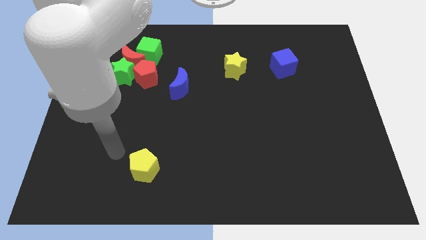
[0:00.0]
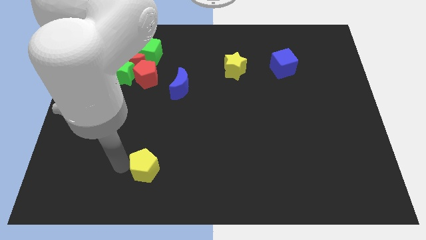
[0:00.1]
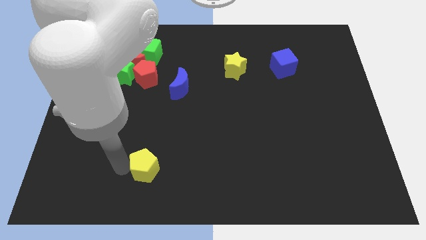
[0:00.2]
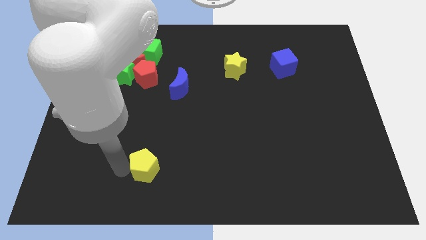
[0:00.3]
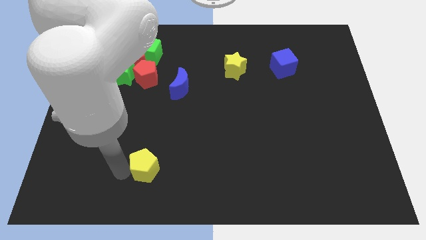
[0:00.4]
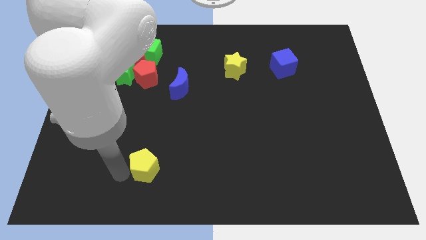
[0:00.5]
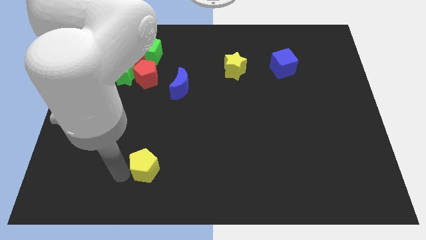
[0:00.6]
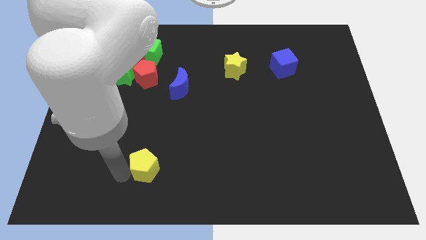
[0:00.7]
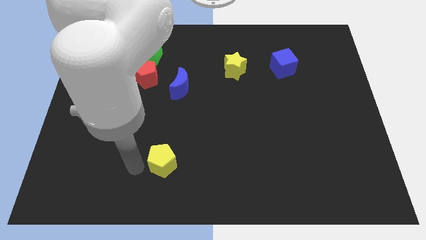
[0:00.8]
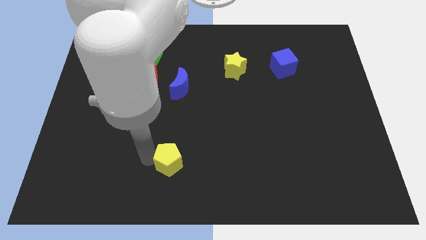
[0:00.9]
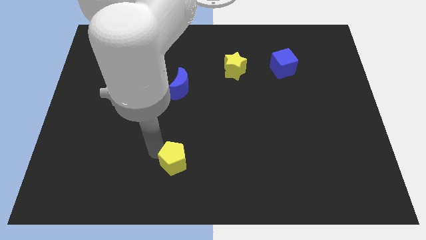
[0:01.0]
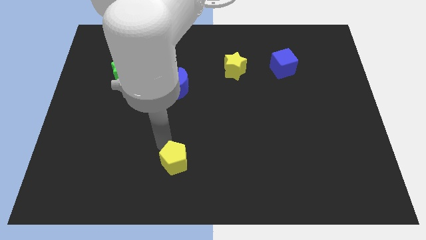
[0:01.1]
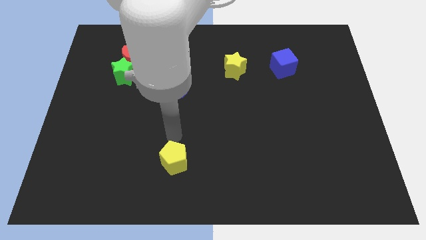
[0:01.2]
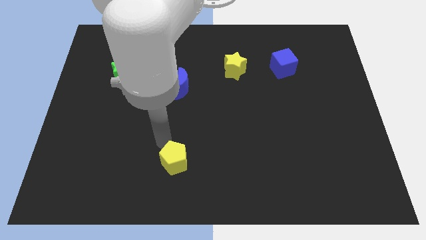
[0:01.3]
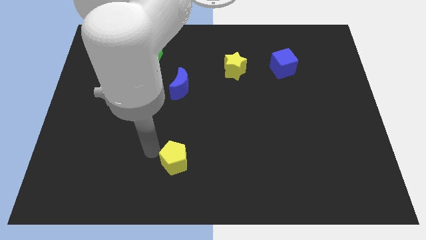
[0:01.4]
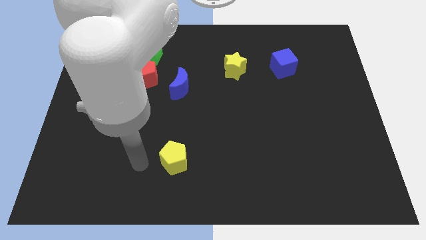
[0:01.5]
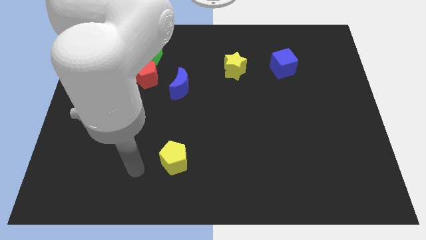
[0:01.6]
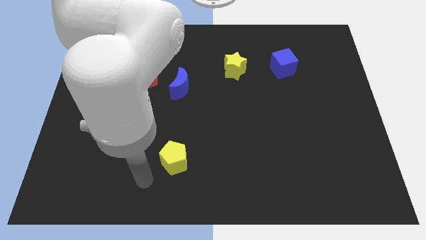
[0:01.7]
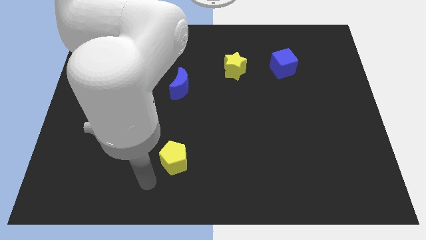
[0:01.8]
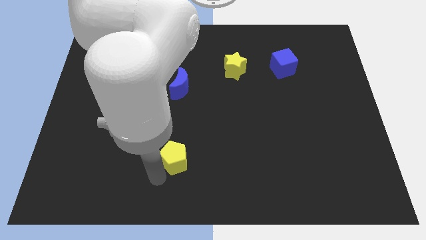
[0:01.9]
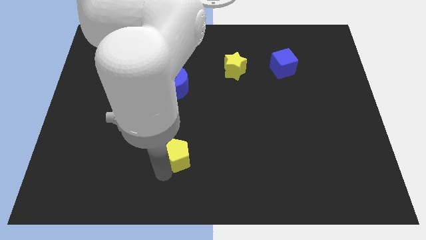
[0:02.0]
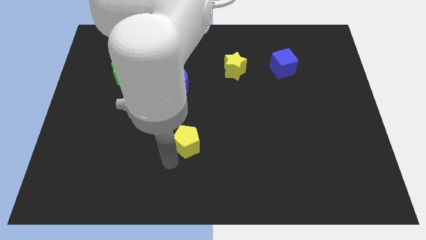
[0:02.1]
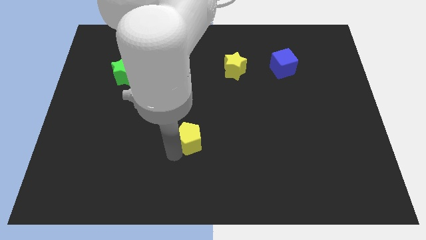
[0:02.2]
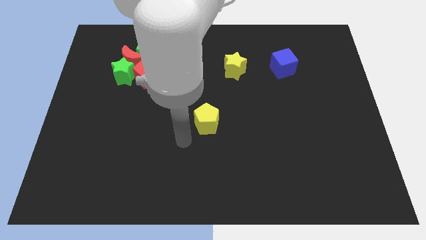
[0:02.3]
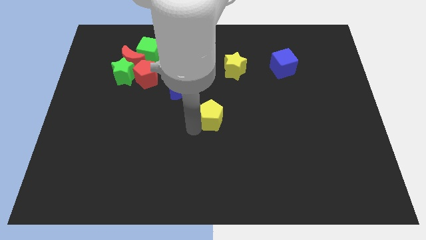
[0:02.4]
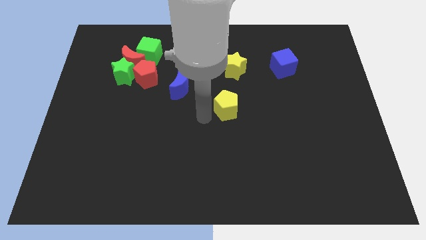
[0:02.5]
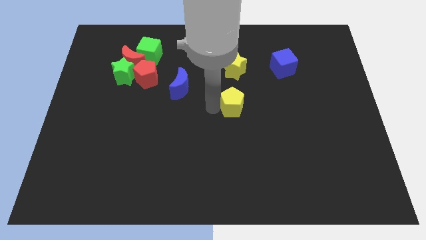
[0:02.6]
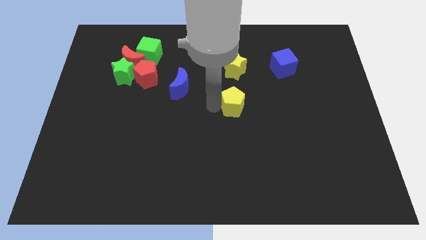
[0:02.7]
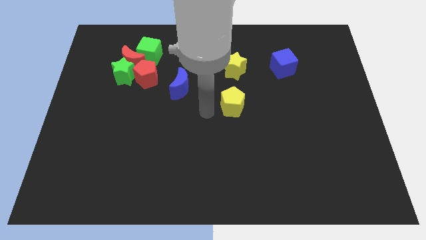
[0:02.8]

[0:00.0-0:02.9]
push the yellow pentagon towards the center of the board

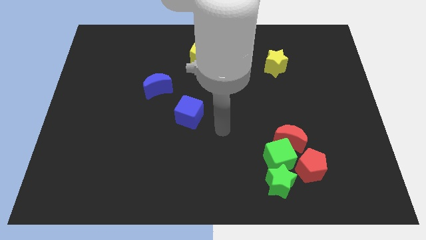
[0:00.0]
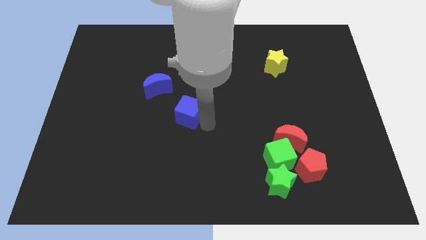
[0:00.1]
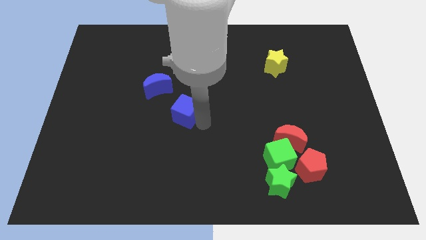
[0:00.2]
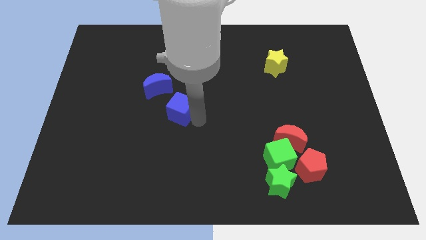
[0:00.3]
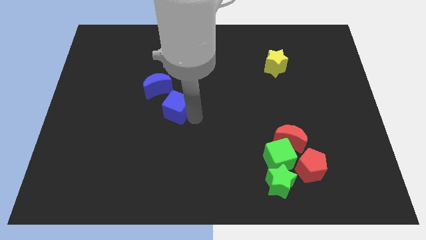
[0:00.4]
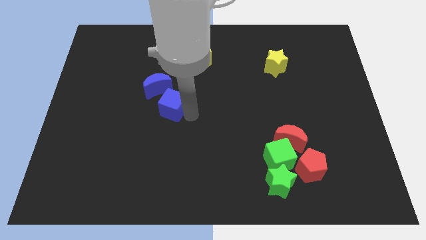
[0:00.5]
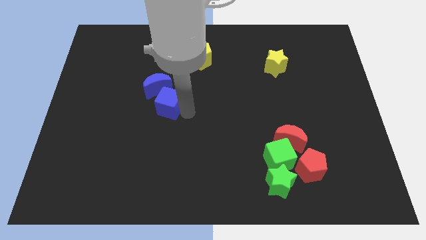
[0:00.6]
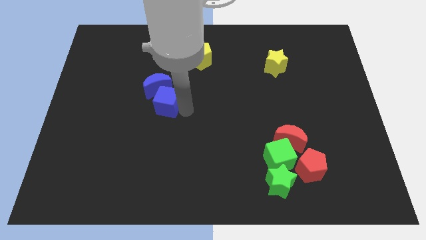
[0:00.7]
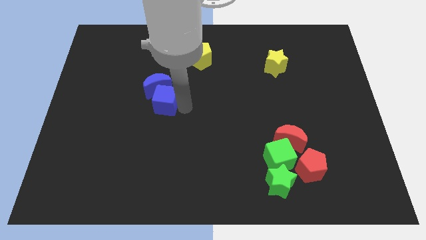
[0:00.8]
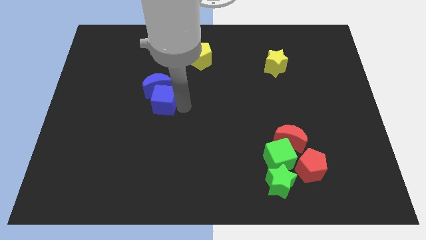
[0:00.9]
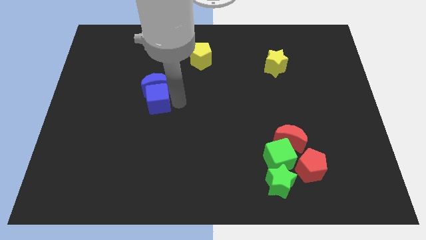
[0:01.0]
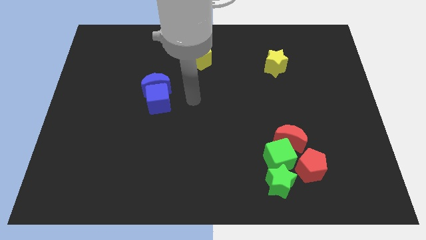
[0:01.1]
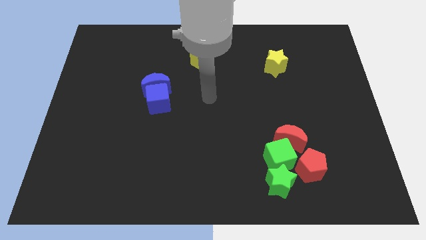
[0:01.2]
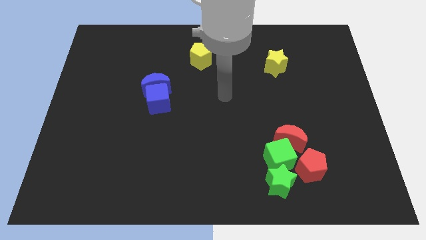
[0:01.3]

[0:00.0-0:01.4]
move the blue cube to the bottom of the blue moon

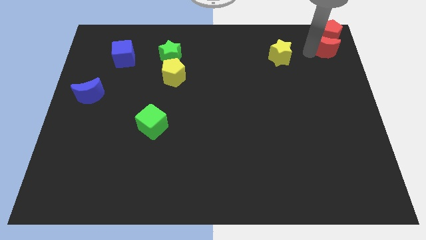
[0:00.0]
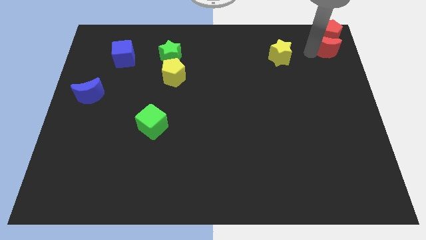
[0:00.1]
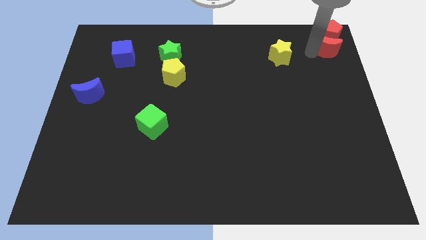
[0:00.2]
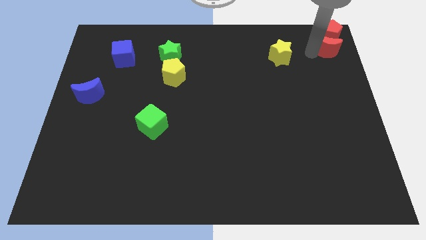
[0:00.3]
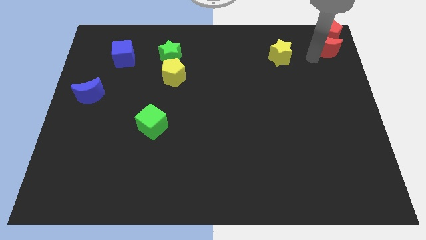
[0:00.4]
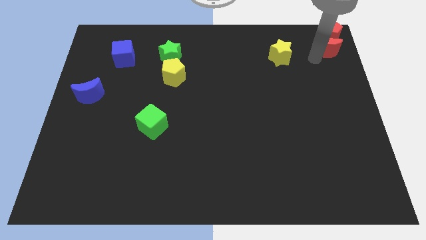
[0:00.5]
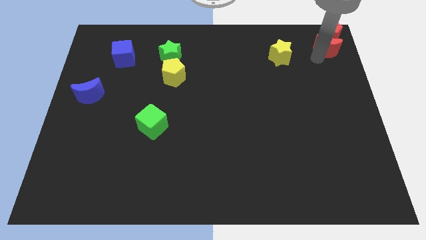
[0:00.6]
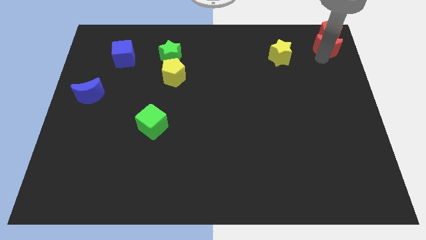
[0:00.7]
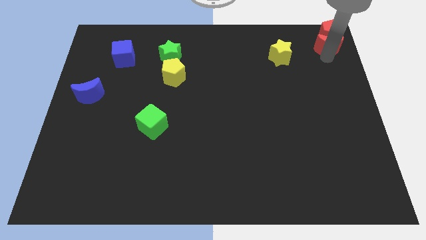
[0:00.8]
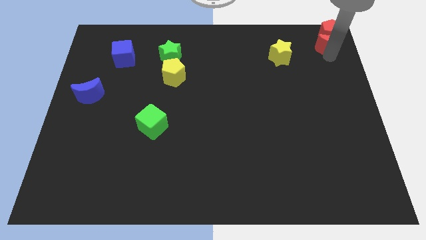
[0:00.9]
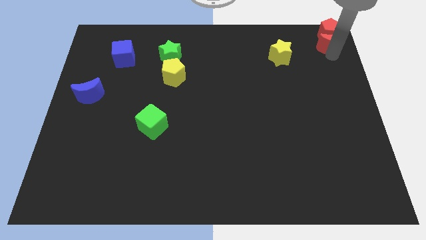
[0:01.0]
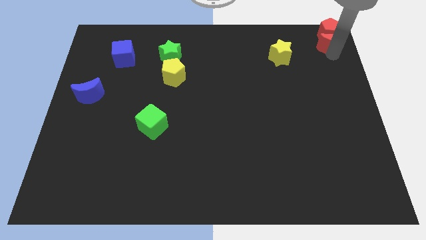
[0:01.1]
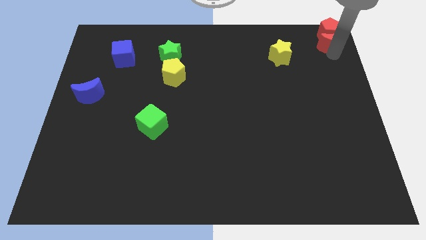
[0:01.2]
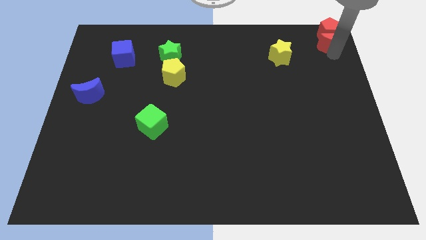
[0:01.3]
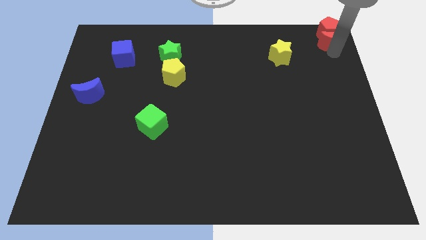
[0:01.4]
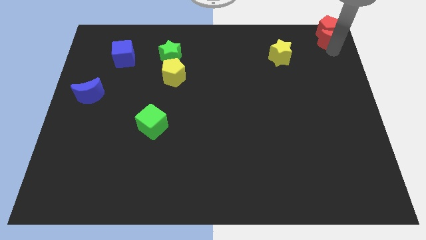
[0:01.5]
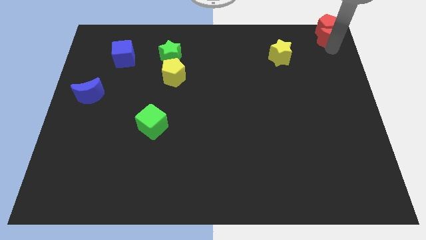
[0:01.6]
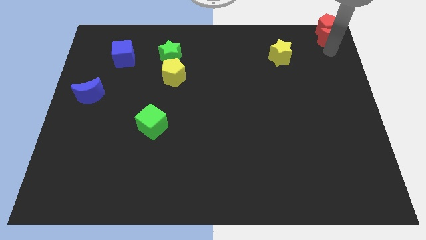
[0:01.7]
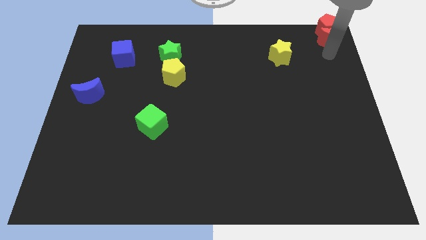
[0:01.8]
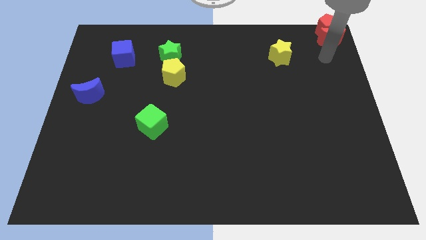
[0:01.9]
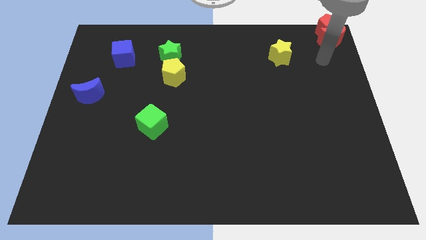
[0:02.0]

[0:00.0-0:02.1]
push the red moon to the top right corner

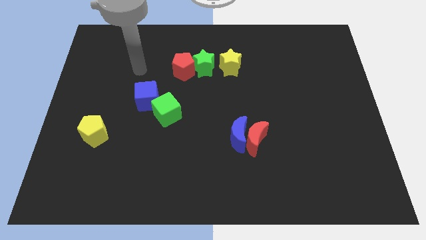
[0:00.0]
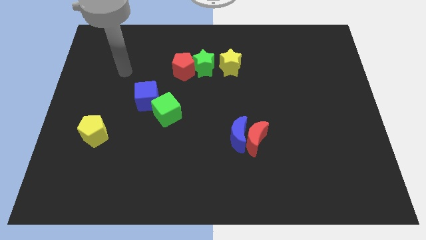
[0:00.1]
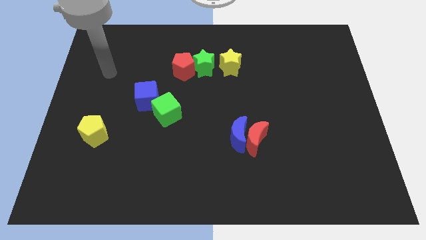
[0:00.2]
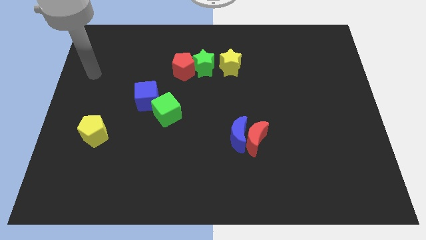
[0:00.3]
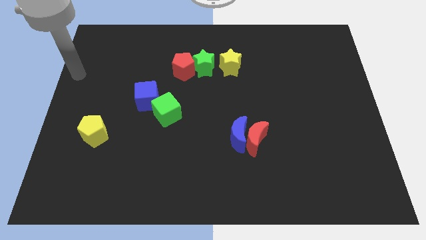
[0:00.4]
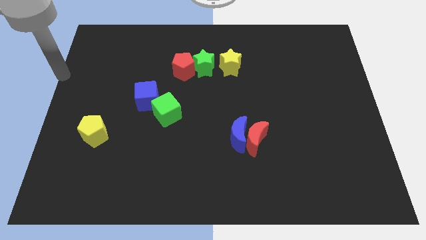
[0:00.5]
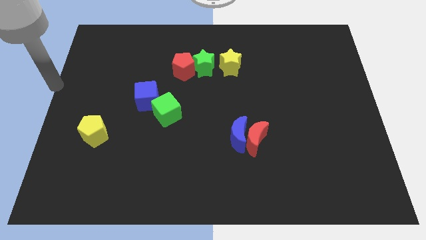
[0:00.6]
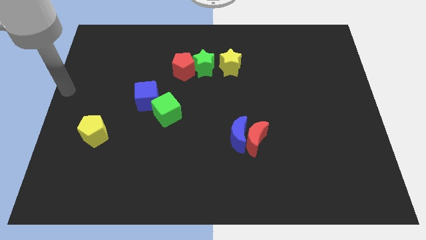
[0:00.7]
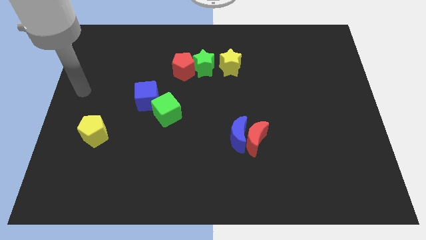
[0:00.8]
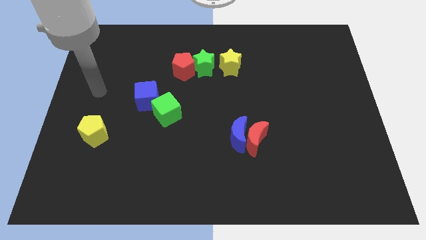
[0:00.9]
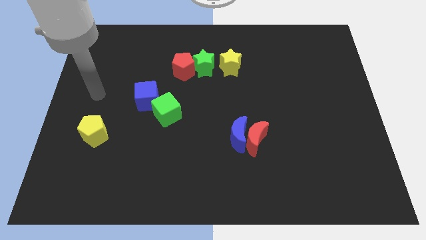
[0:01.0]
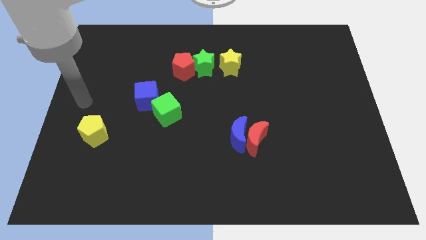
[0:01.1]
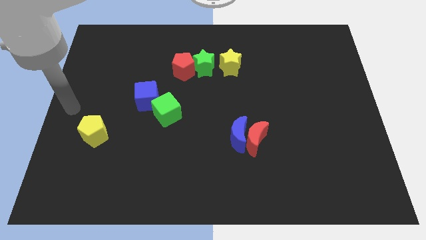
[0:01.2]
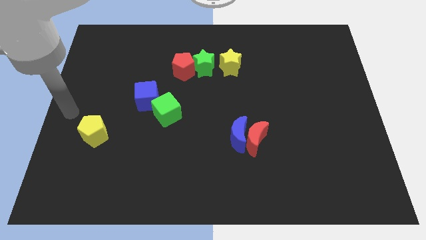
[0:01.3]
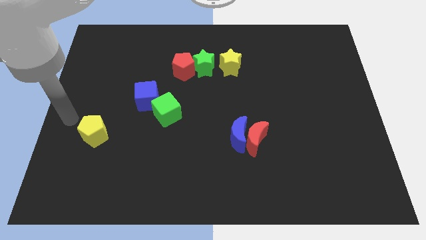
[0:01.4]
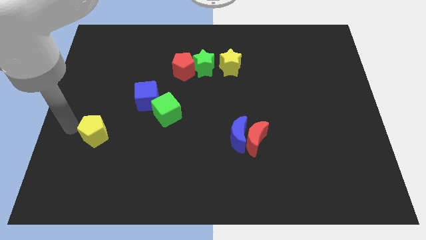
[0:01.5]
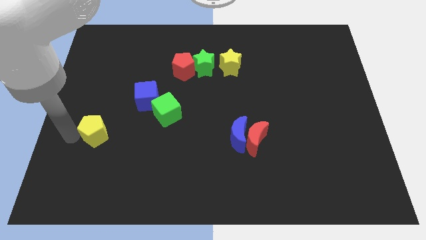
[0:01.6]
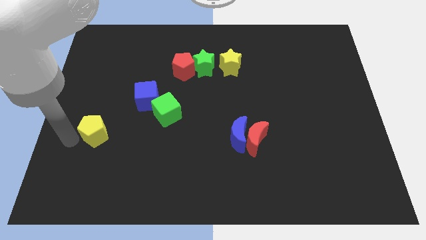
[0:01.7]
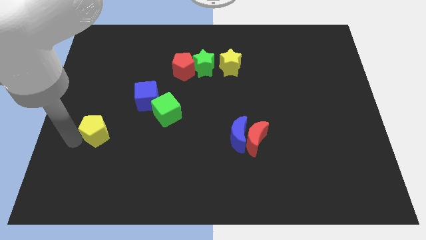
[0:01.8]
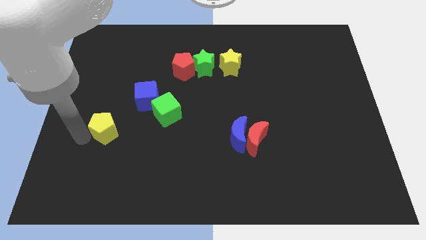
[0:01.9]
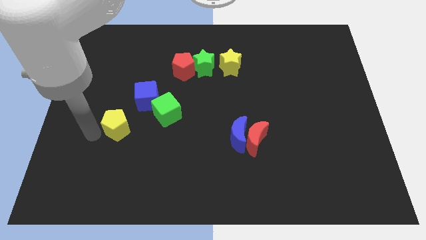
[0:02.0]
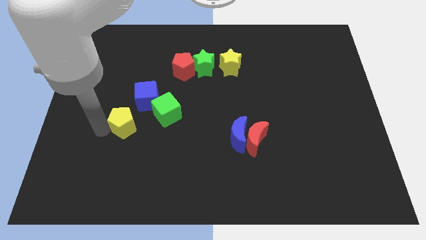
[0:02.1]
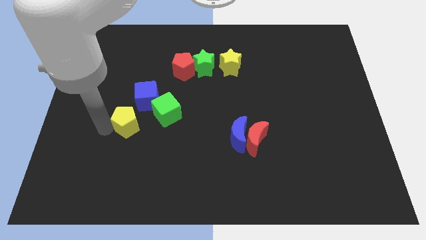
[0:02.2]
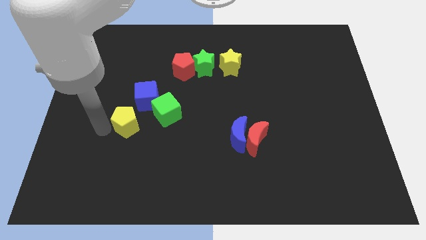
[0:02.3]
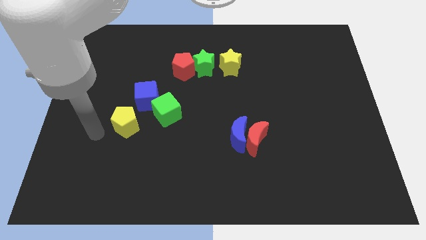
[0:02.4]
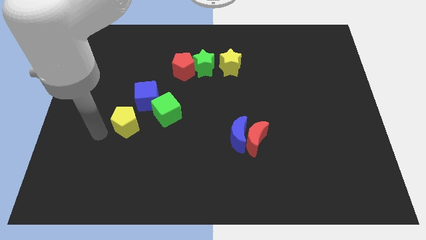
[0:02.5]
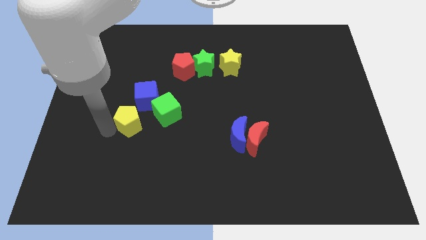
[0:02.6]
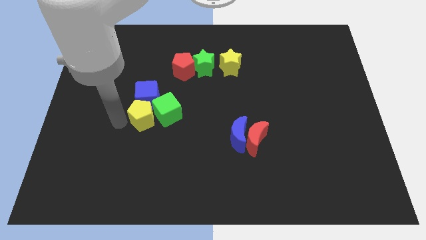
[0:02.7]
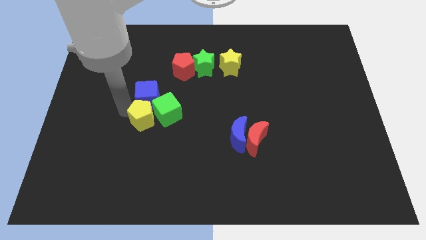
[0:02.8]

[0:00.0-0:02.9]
move the yellow pentagon to the green and blue cubes
